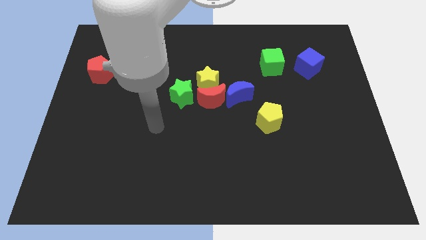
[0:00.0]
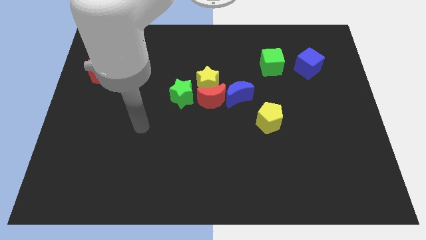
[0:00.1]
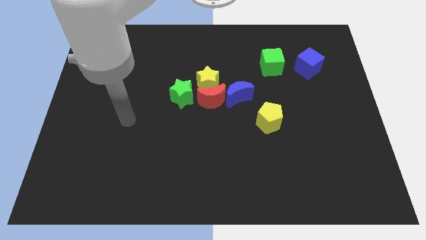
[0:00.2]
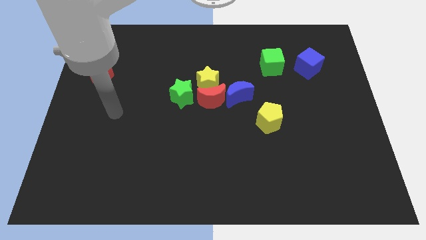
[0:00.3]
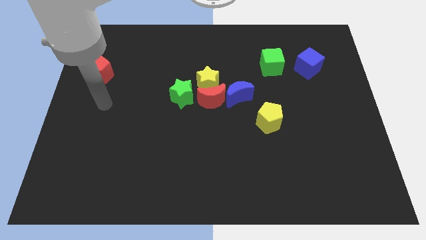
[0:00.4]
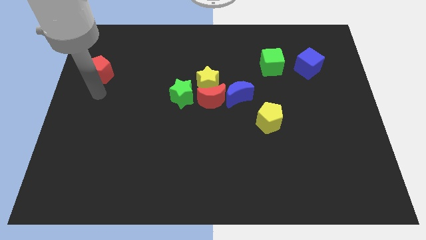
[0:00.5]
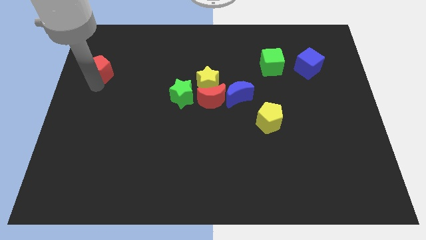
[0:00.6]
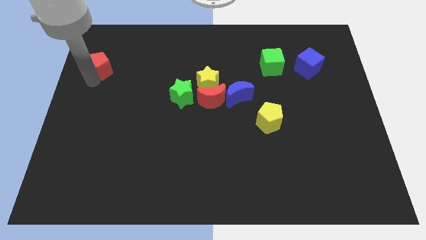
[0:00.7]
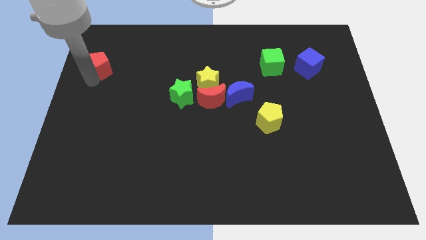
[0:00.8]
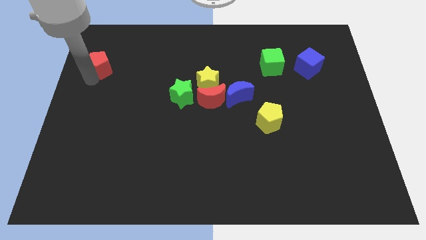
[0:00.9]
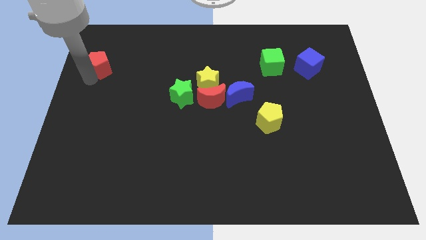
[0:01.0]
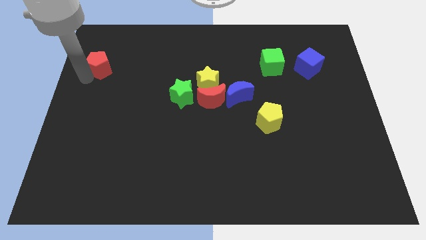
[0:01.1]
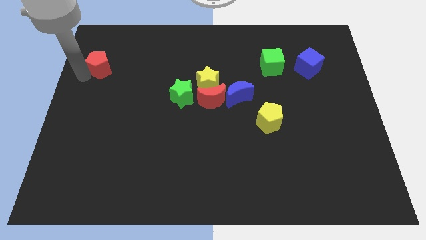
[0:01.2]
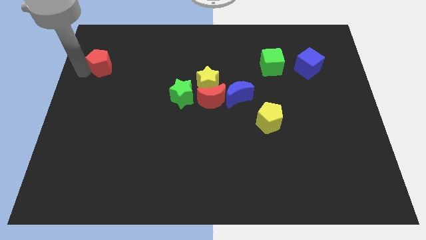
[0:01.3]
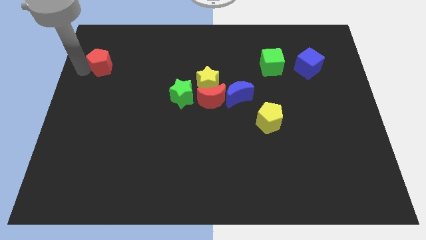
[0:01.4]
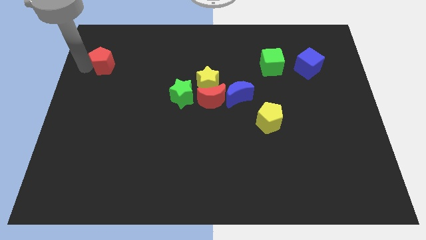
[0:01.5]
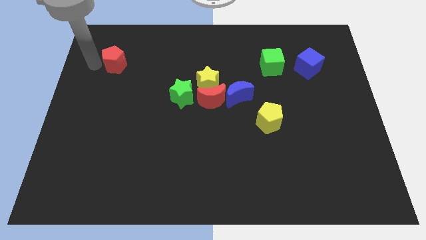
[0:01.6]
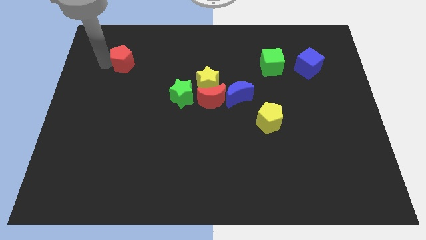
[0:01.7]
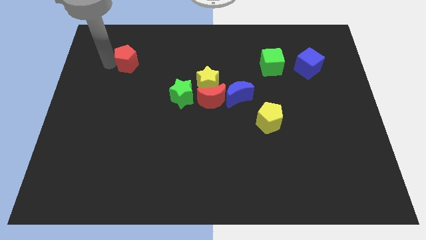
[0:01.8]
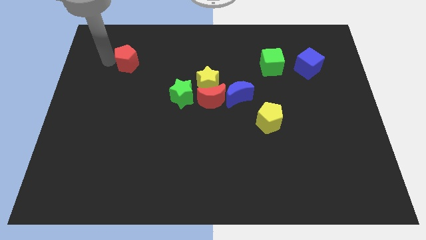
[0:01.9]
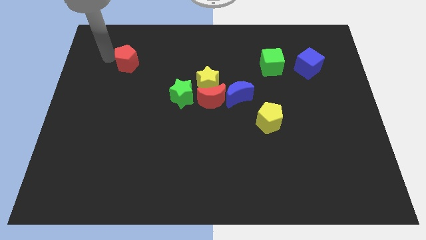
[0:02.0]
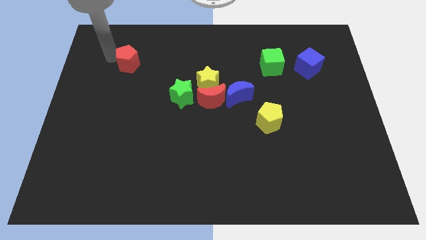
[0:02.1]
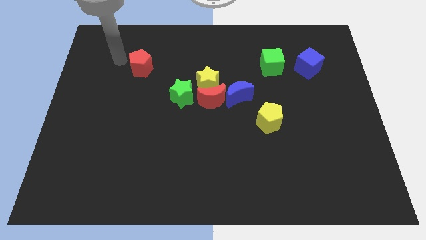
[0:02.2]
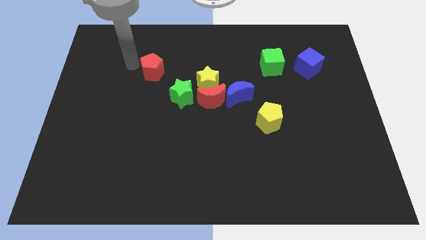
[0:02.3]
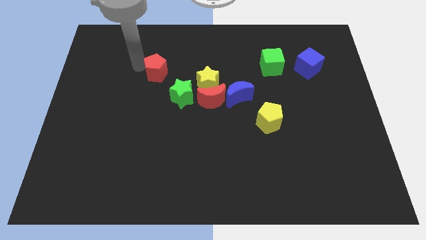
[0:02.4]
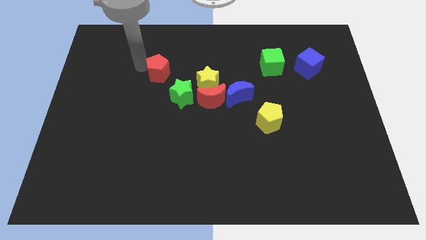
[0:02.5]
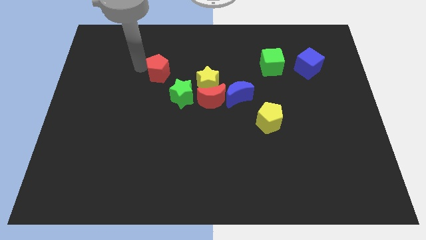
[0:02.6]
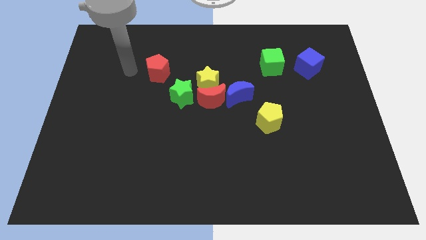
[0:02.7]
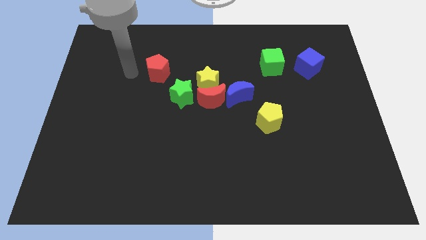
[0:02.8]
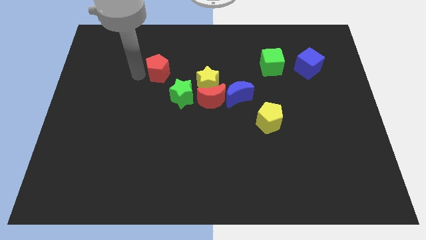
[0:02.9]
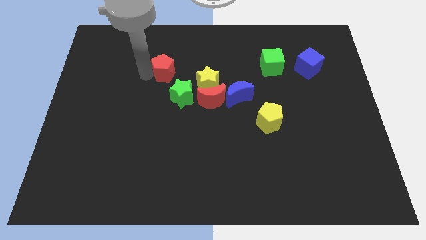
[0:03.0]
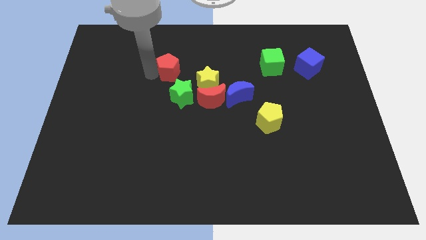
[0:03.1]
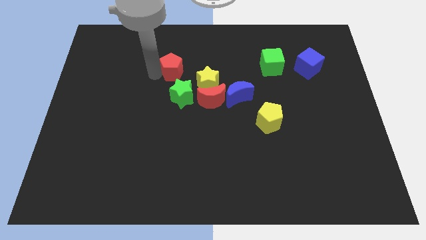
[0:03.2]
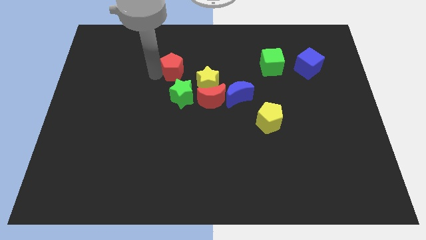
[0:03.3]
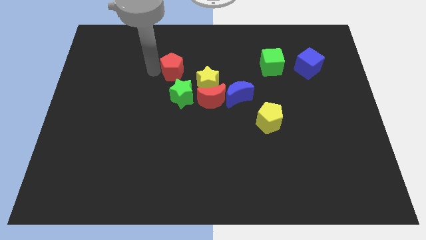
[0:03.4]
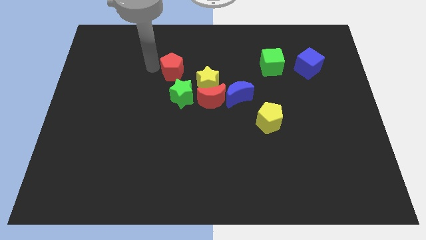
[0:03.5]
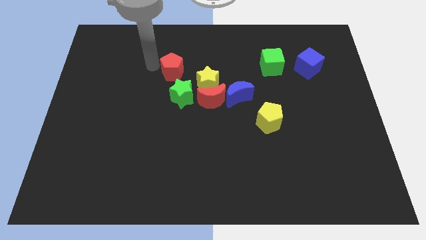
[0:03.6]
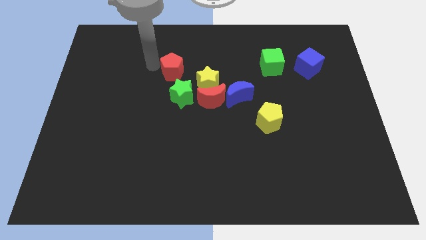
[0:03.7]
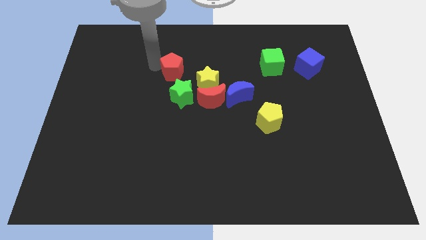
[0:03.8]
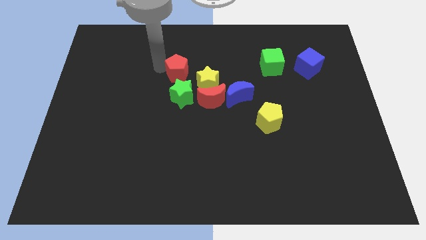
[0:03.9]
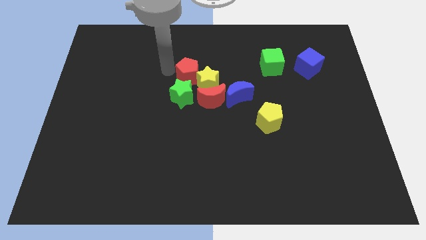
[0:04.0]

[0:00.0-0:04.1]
place red pentagon on top of green star

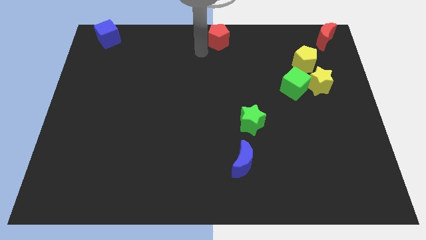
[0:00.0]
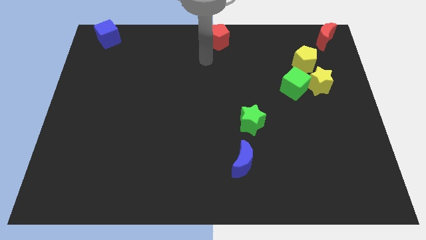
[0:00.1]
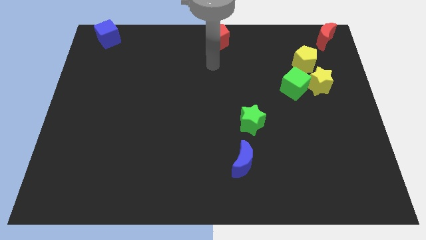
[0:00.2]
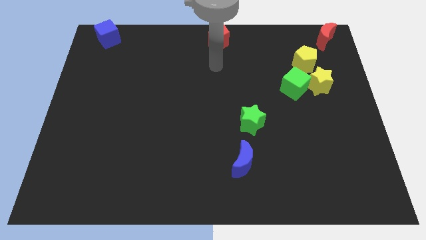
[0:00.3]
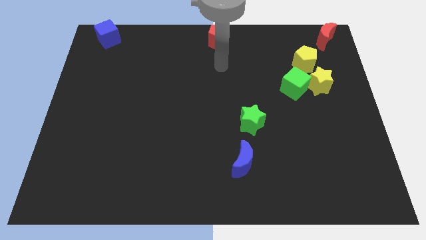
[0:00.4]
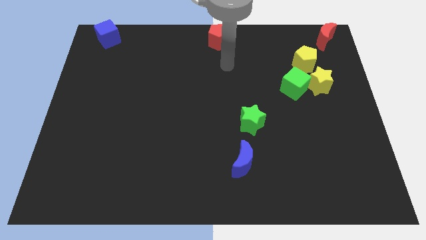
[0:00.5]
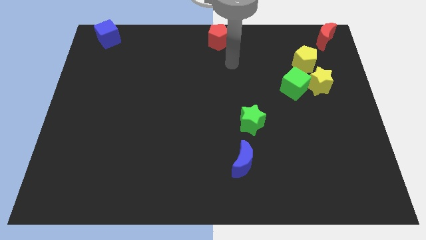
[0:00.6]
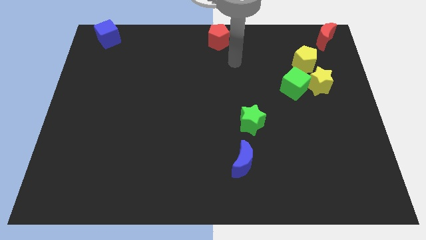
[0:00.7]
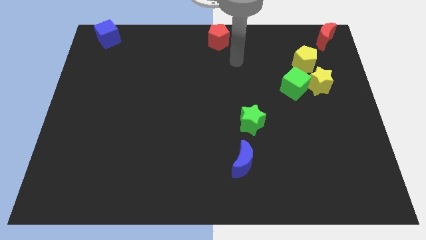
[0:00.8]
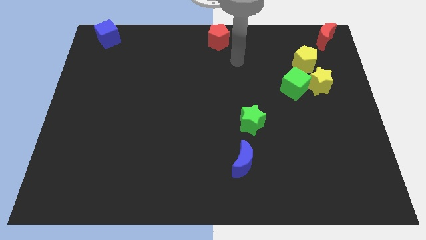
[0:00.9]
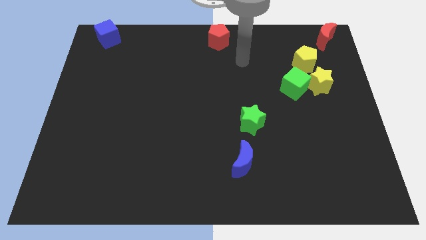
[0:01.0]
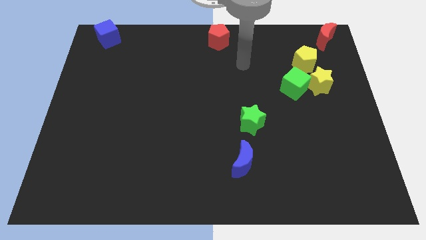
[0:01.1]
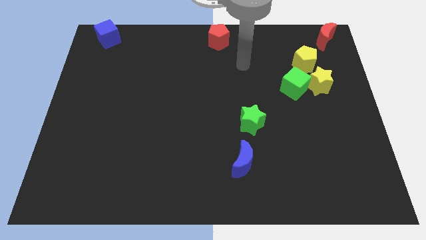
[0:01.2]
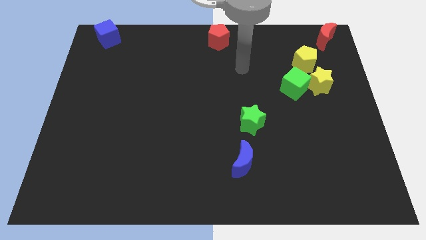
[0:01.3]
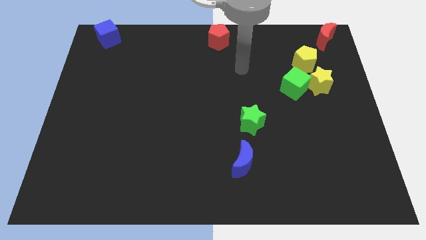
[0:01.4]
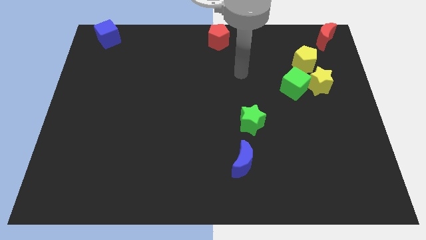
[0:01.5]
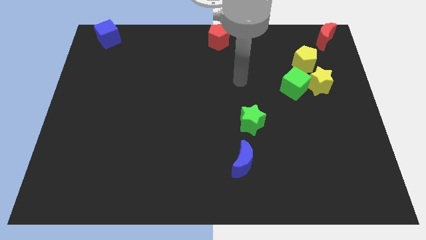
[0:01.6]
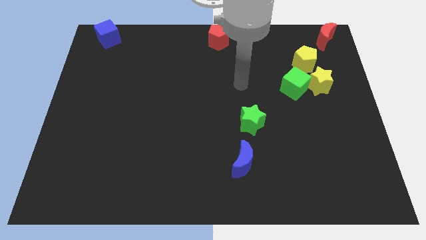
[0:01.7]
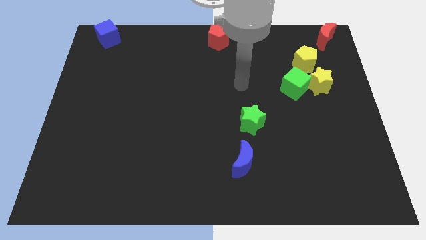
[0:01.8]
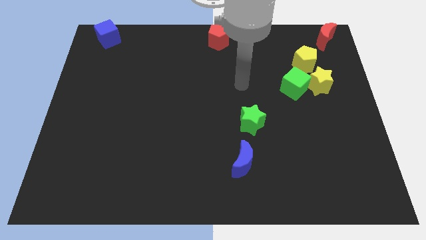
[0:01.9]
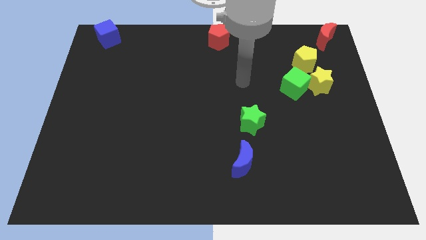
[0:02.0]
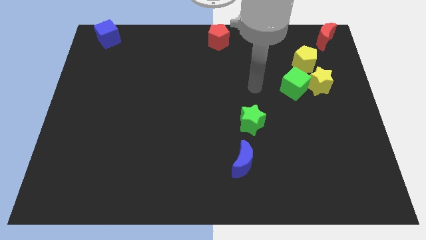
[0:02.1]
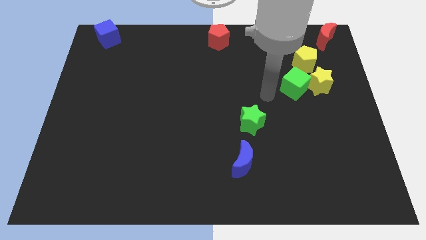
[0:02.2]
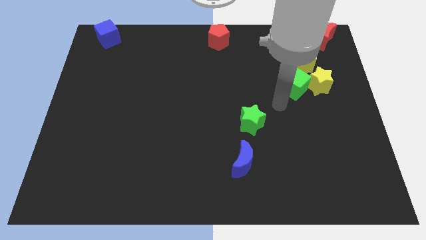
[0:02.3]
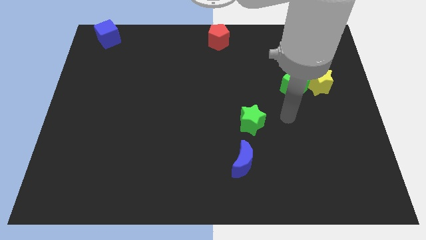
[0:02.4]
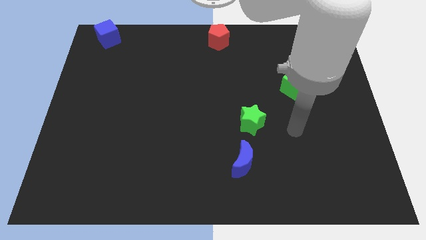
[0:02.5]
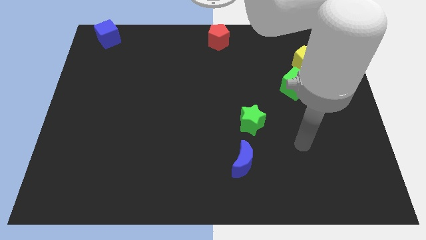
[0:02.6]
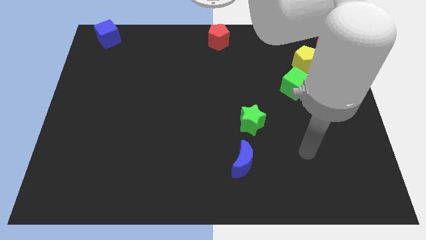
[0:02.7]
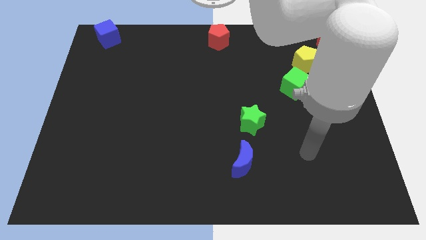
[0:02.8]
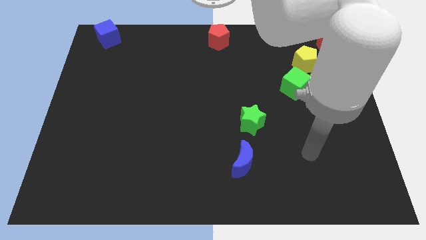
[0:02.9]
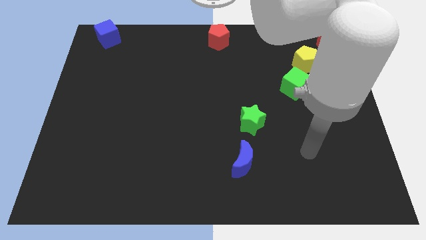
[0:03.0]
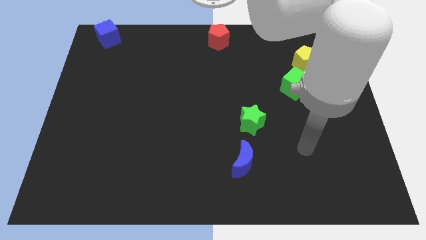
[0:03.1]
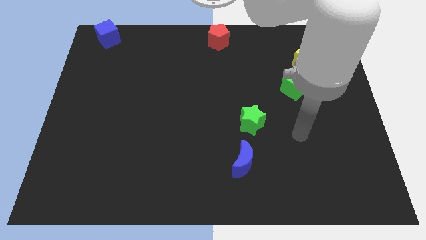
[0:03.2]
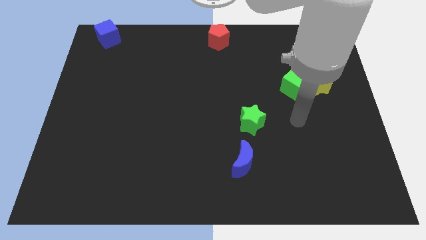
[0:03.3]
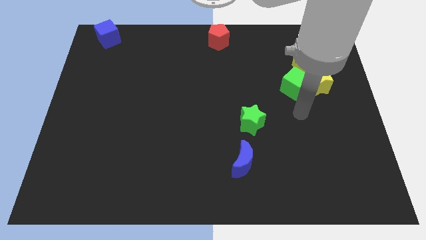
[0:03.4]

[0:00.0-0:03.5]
move your arm away from the red pentagon

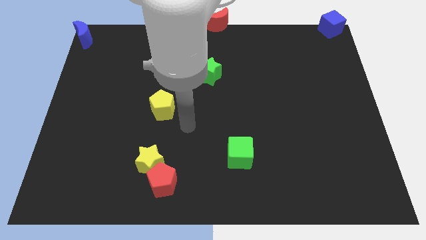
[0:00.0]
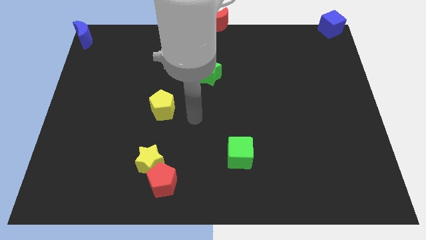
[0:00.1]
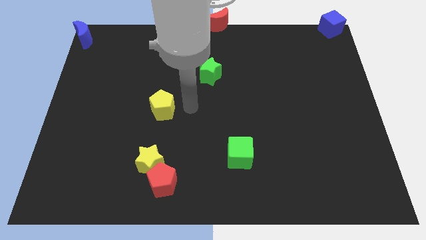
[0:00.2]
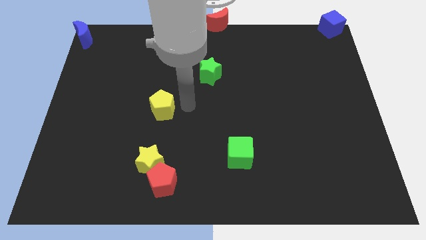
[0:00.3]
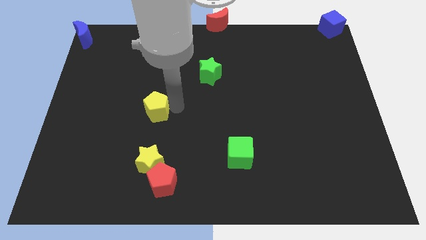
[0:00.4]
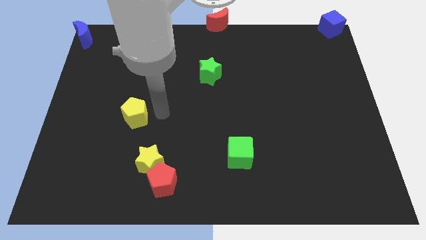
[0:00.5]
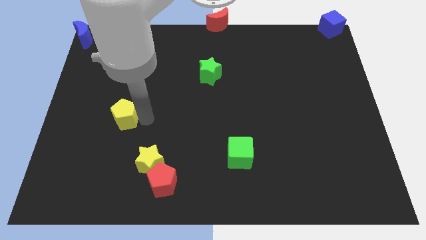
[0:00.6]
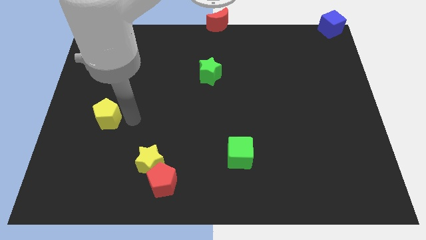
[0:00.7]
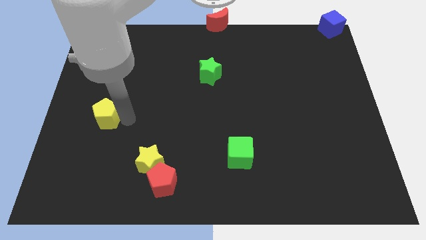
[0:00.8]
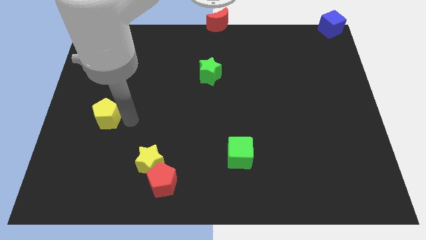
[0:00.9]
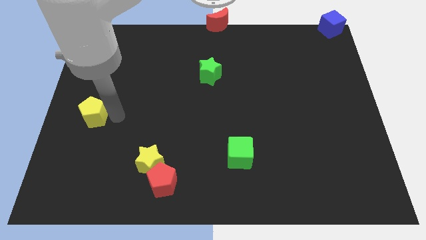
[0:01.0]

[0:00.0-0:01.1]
push the yellow pentagon towards the left side of the board

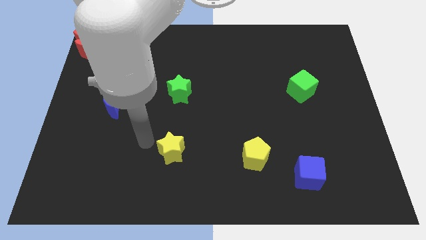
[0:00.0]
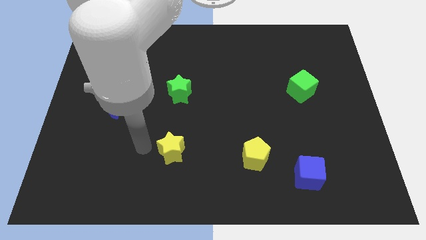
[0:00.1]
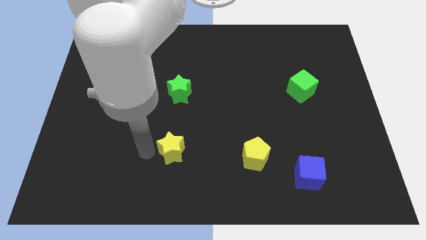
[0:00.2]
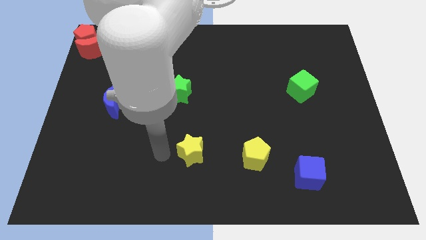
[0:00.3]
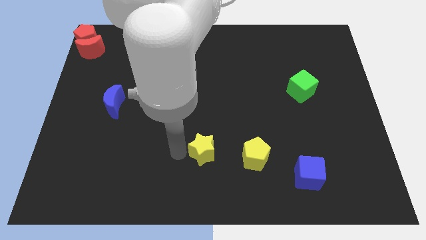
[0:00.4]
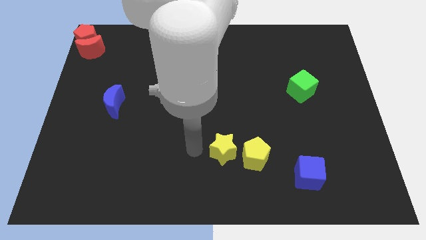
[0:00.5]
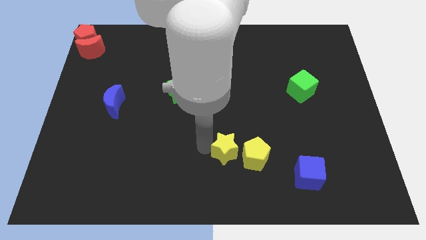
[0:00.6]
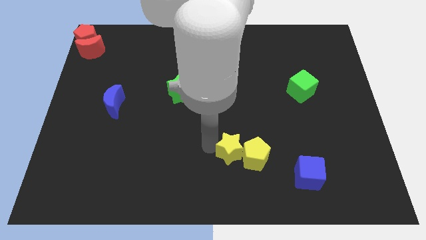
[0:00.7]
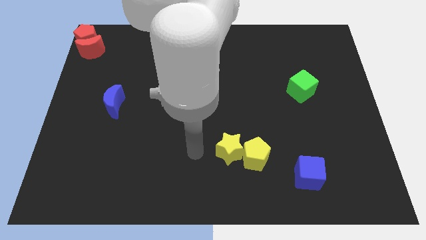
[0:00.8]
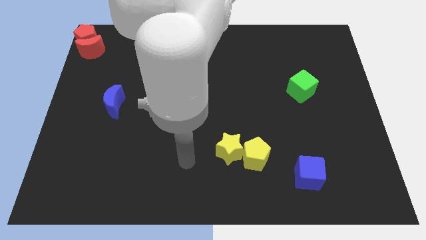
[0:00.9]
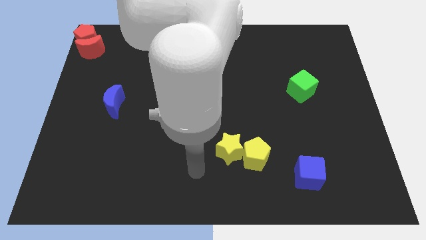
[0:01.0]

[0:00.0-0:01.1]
place yellow star to the left of yellow pentagon
